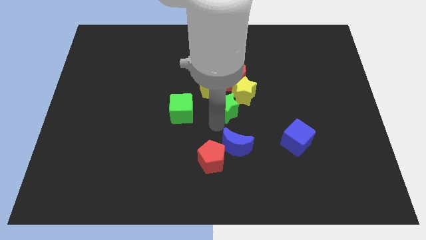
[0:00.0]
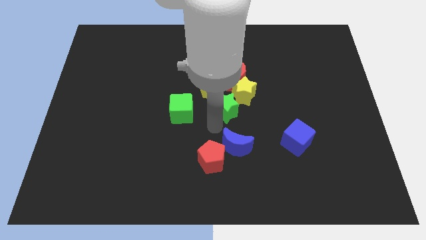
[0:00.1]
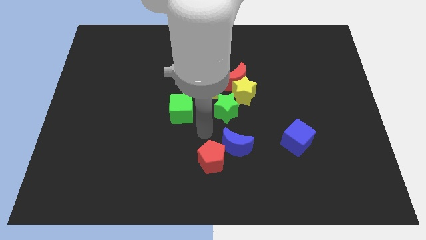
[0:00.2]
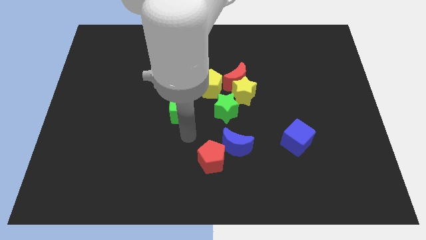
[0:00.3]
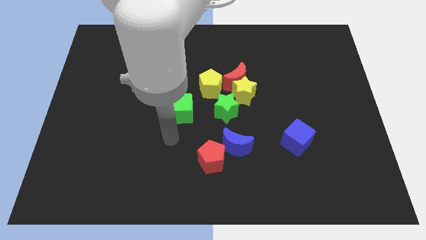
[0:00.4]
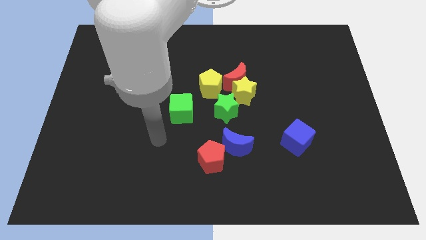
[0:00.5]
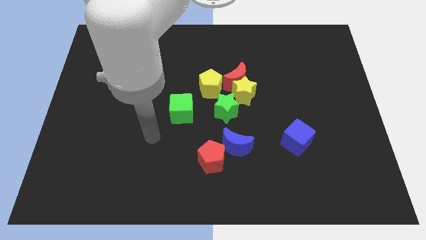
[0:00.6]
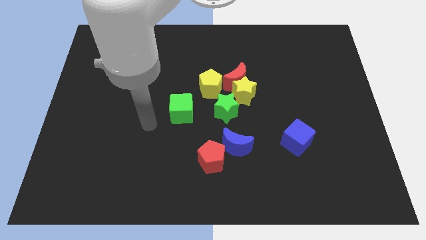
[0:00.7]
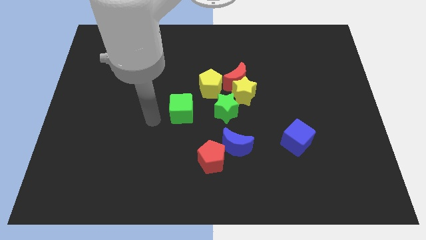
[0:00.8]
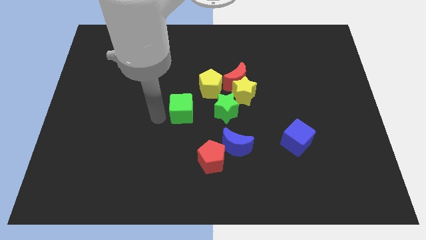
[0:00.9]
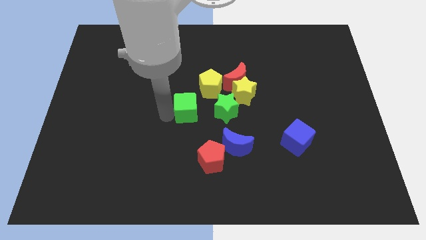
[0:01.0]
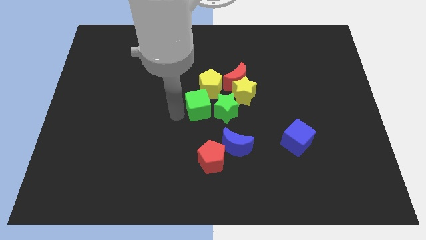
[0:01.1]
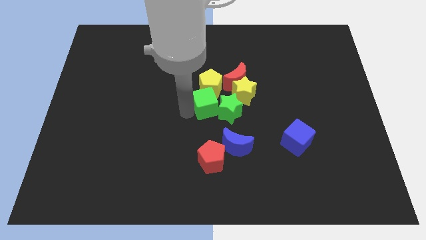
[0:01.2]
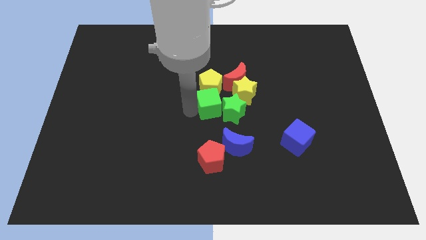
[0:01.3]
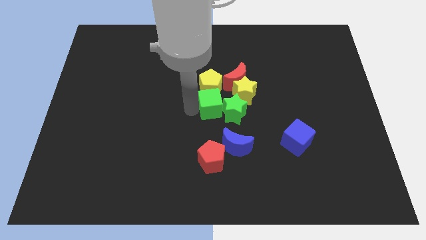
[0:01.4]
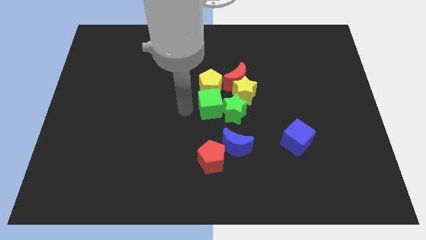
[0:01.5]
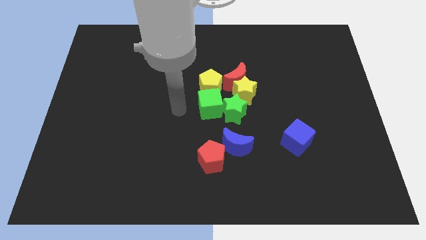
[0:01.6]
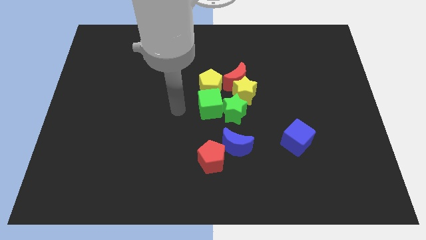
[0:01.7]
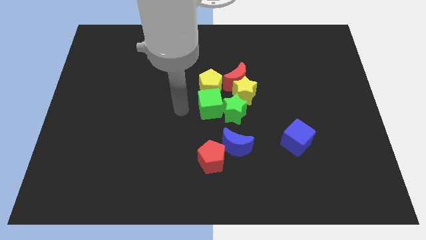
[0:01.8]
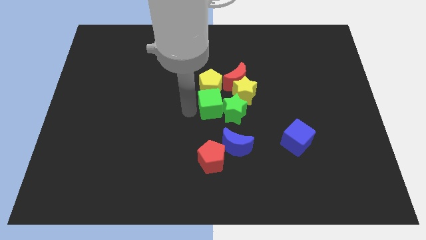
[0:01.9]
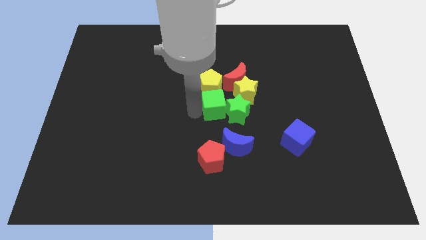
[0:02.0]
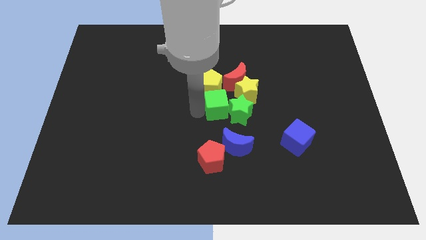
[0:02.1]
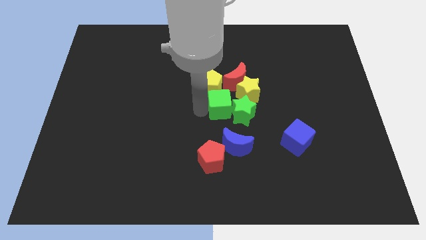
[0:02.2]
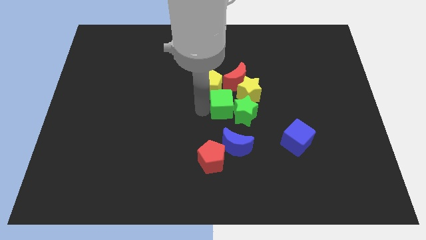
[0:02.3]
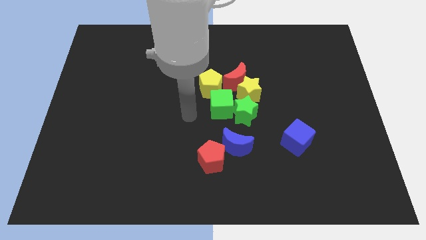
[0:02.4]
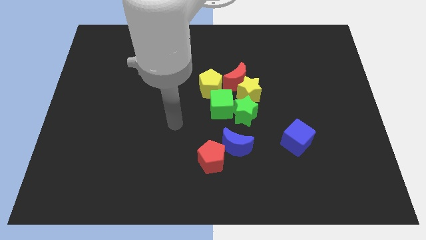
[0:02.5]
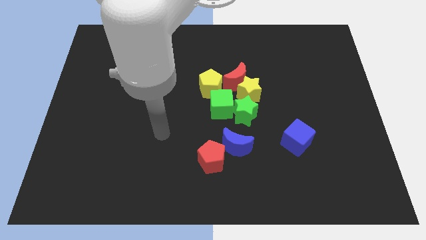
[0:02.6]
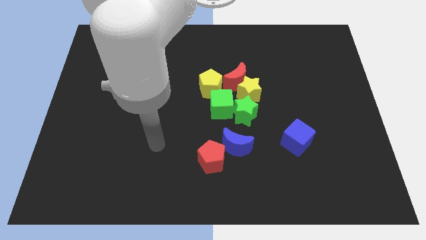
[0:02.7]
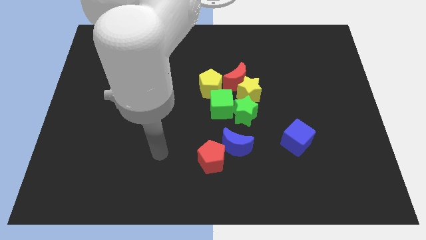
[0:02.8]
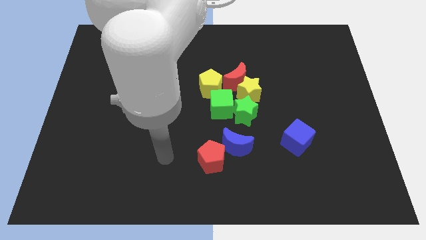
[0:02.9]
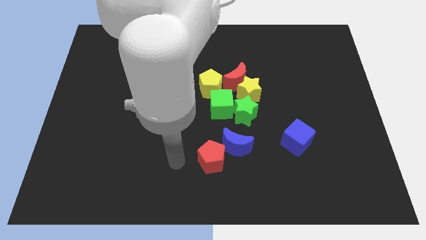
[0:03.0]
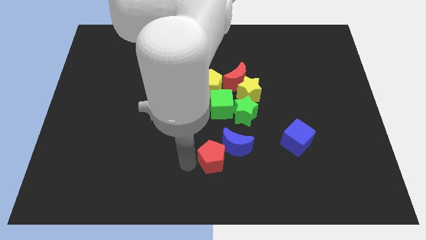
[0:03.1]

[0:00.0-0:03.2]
push the green cube into green star

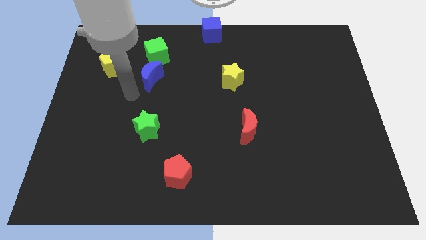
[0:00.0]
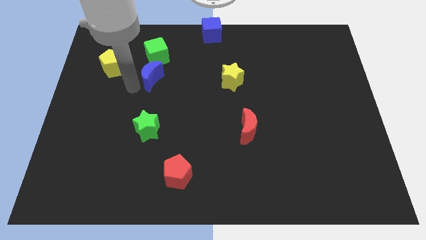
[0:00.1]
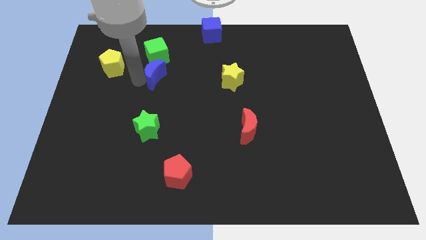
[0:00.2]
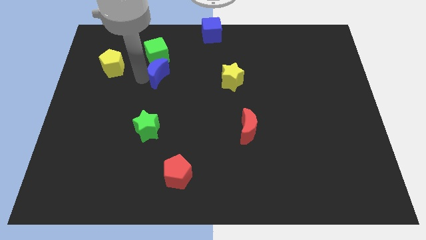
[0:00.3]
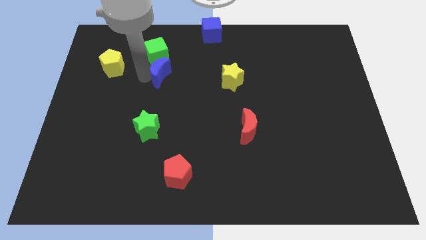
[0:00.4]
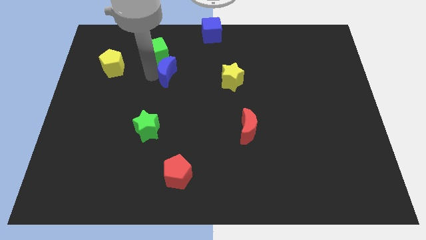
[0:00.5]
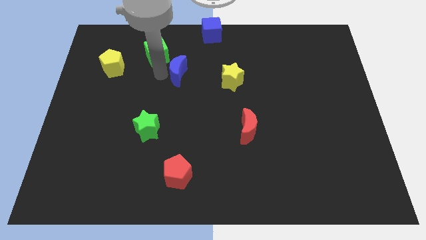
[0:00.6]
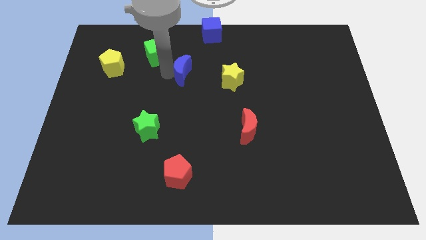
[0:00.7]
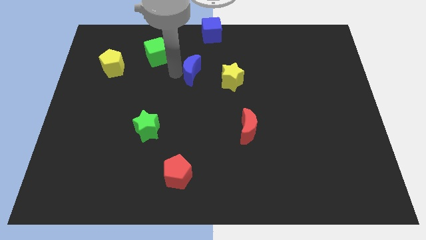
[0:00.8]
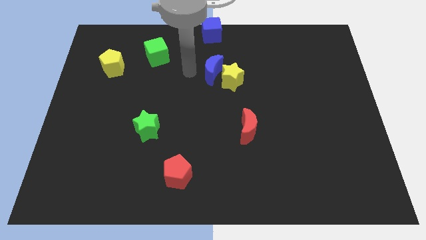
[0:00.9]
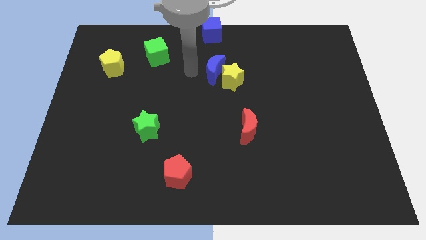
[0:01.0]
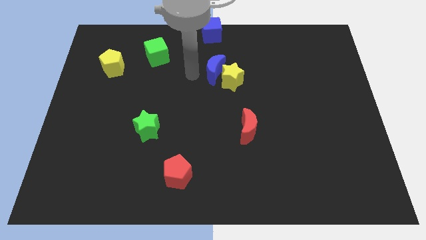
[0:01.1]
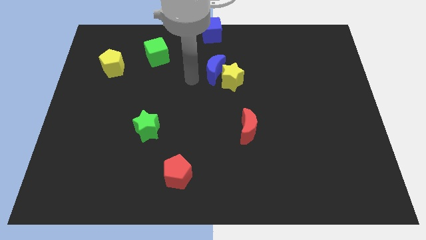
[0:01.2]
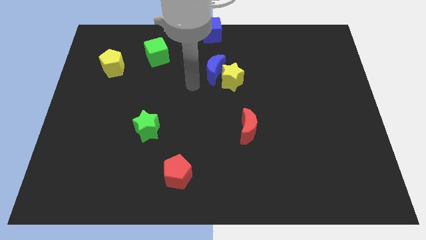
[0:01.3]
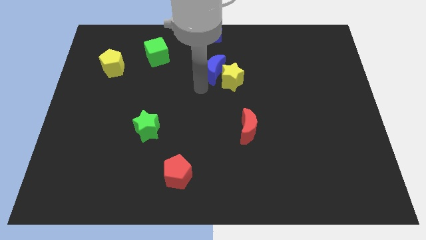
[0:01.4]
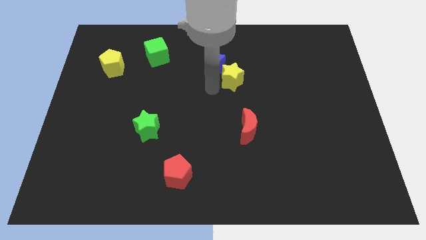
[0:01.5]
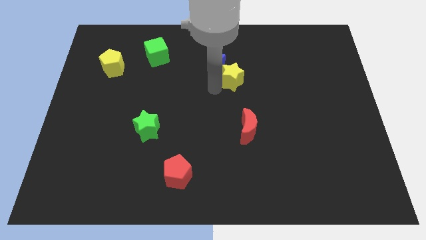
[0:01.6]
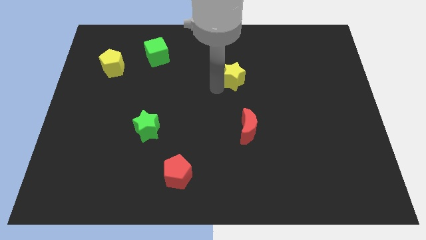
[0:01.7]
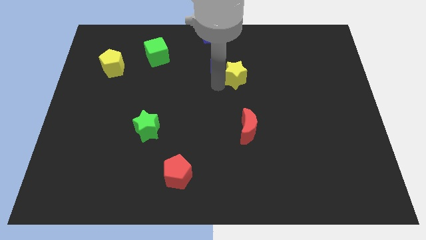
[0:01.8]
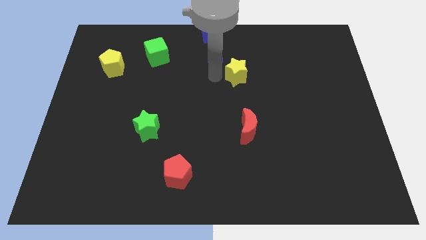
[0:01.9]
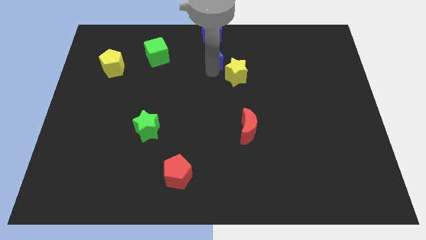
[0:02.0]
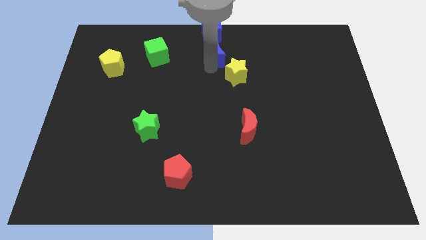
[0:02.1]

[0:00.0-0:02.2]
separate blue moon from the green cube

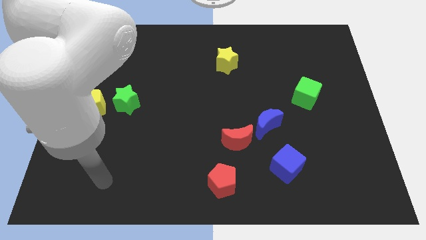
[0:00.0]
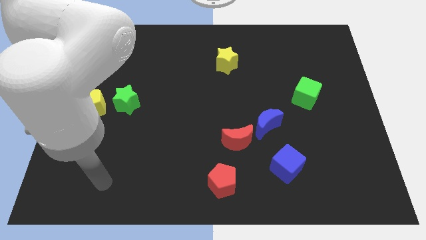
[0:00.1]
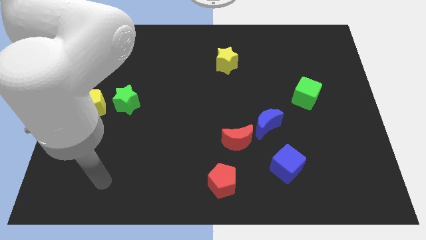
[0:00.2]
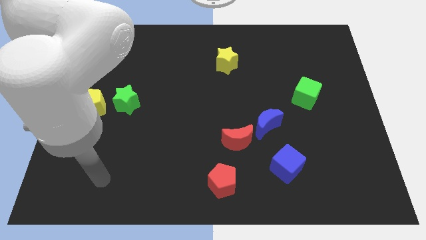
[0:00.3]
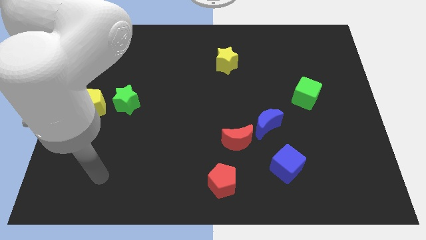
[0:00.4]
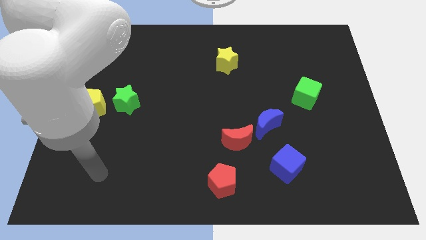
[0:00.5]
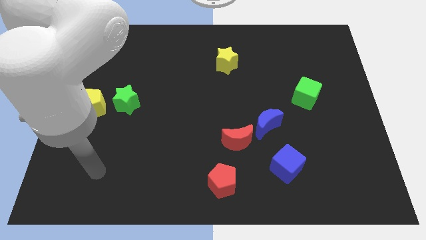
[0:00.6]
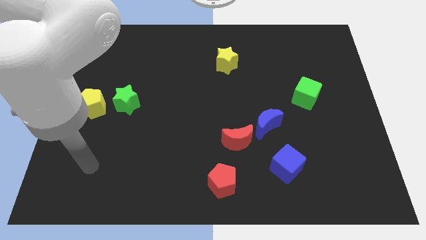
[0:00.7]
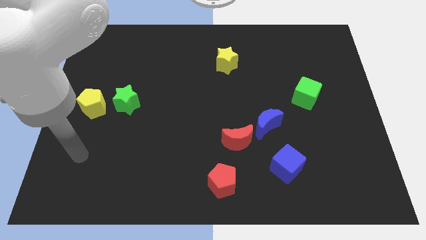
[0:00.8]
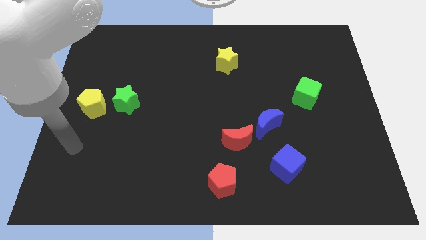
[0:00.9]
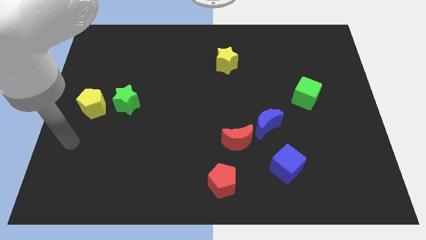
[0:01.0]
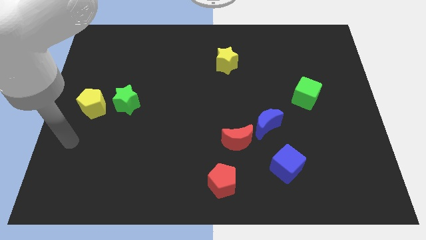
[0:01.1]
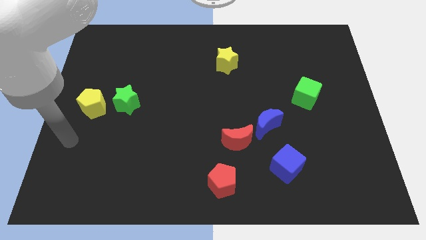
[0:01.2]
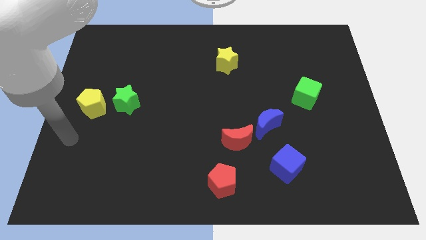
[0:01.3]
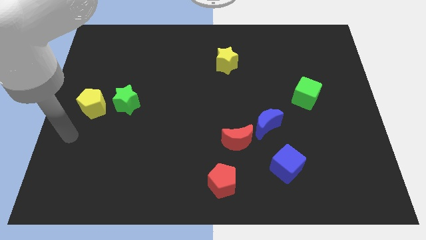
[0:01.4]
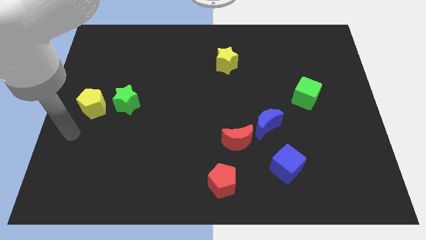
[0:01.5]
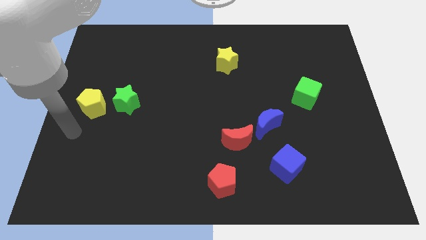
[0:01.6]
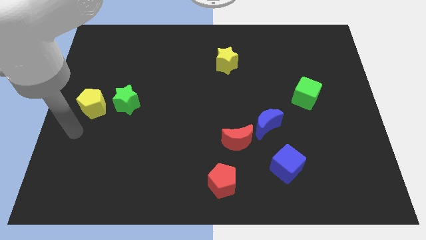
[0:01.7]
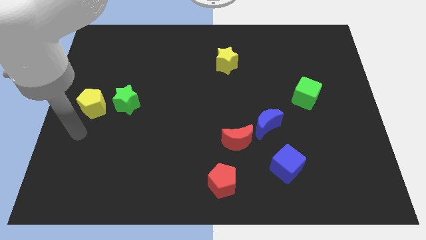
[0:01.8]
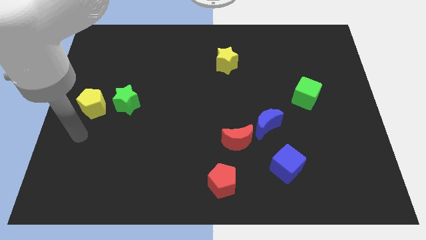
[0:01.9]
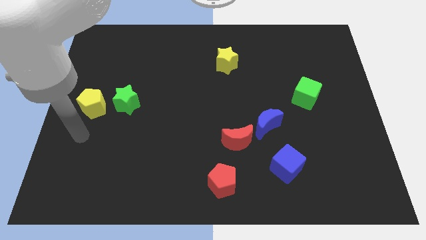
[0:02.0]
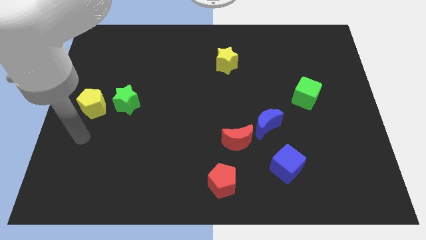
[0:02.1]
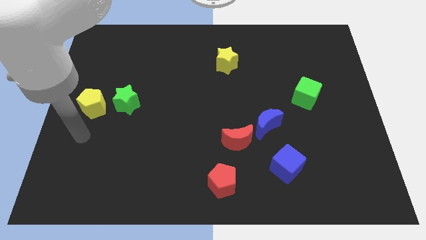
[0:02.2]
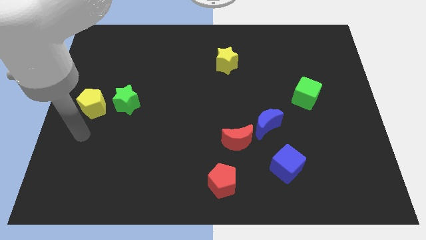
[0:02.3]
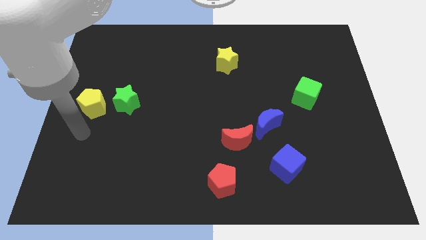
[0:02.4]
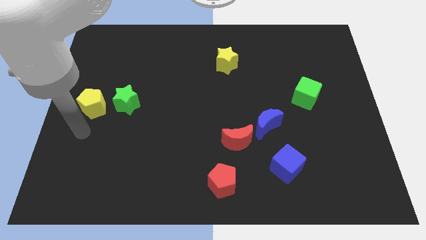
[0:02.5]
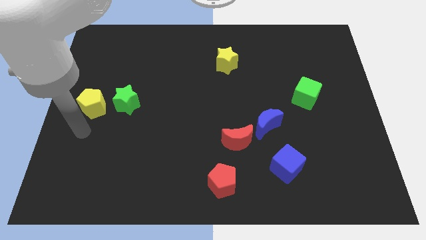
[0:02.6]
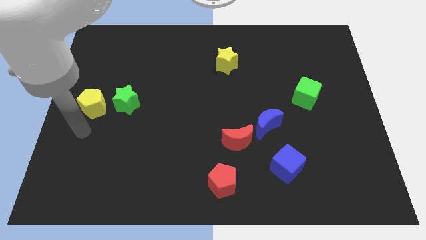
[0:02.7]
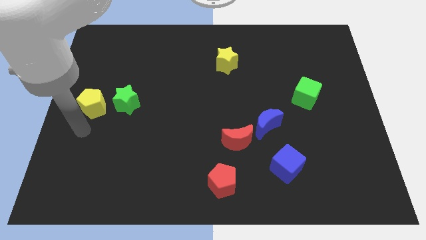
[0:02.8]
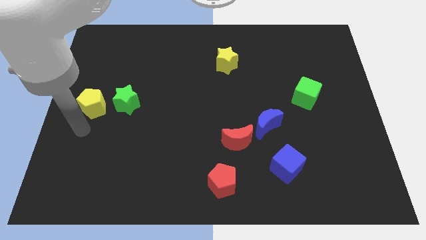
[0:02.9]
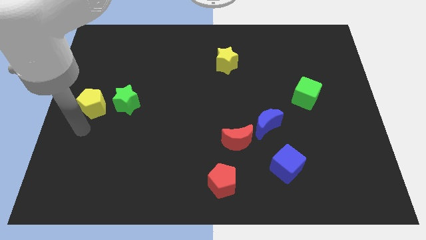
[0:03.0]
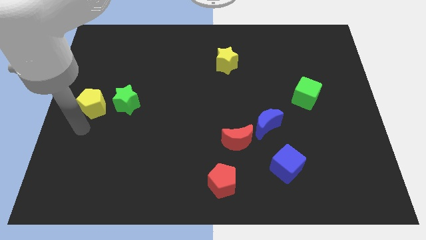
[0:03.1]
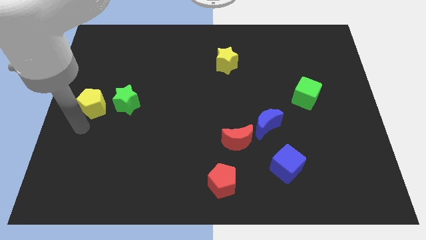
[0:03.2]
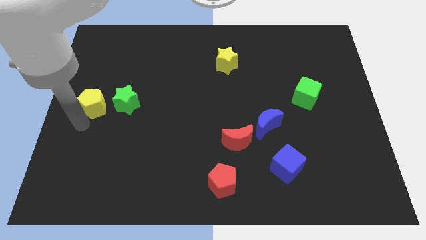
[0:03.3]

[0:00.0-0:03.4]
move the arm towards the left center

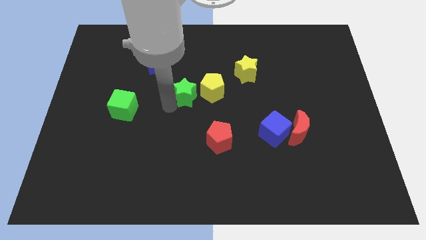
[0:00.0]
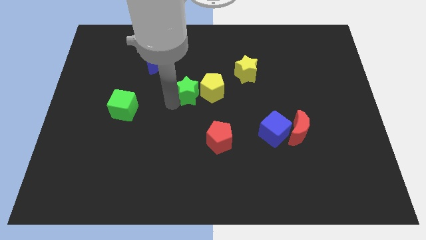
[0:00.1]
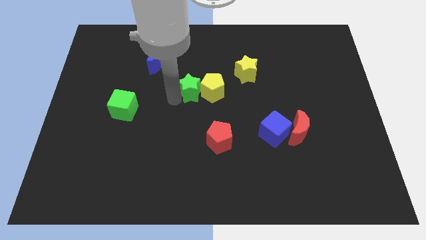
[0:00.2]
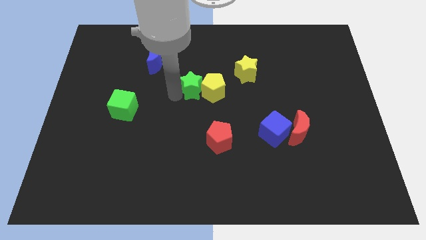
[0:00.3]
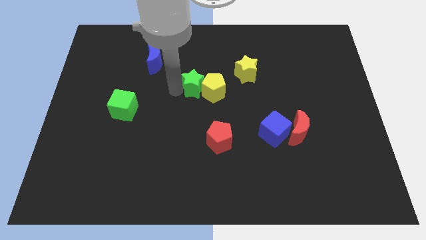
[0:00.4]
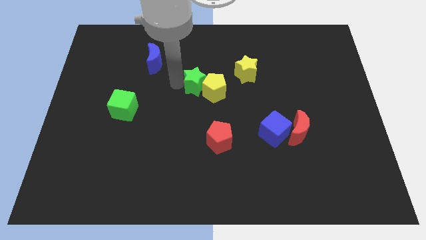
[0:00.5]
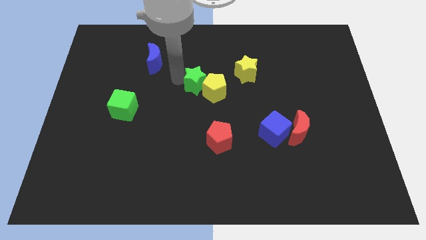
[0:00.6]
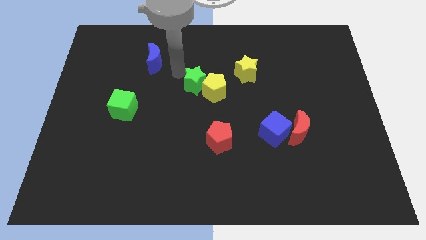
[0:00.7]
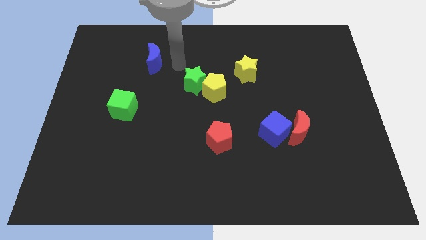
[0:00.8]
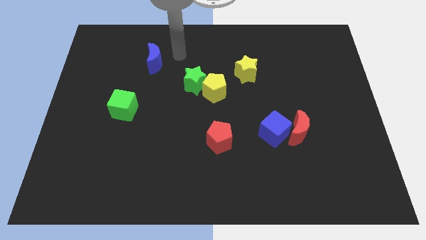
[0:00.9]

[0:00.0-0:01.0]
push green star slightly towards right upwards
